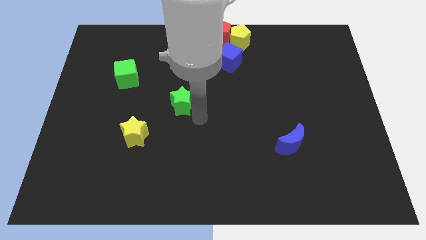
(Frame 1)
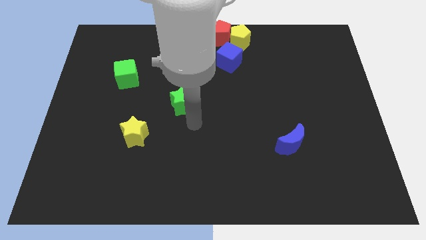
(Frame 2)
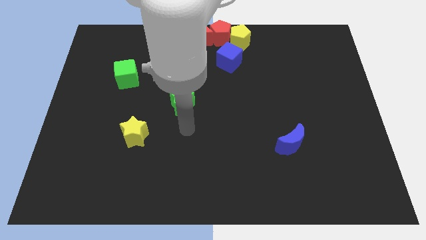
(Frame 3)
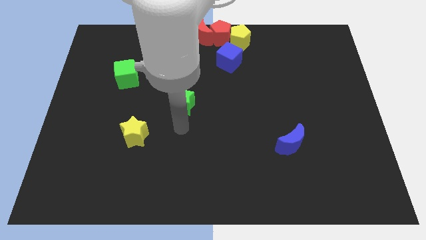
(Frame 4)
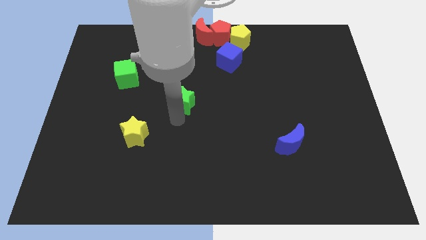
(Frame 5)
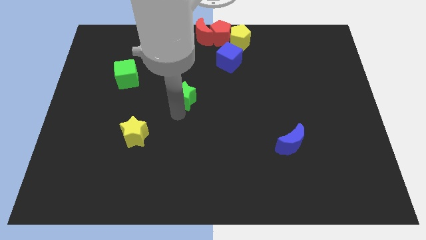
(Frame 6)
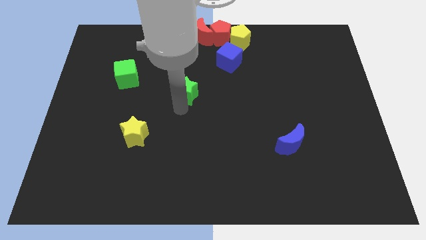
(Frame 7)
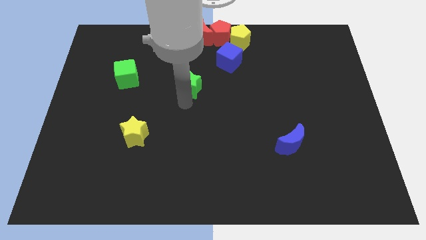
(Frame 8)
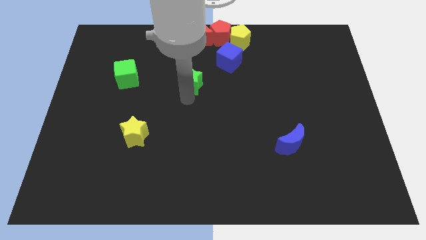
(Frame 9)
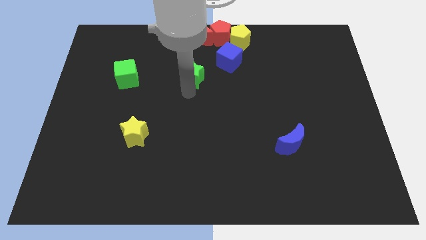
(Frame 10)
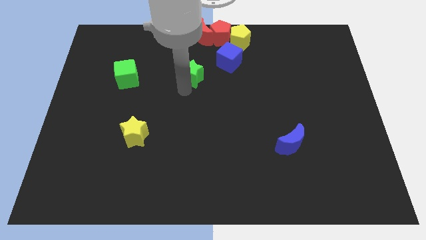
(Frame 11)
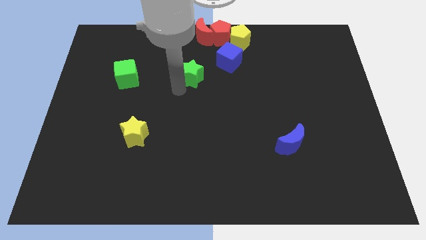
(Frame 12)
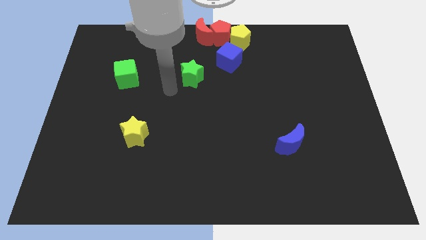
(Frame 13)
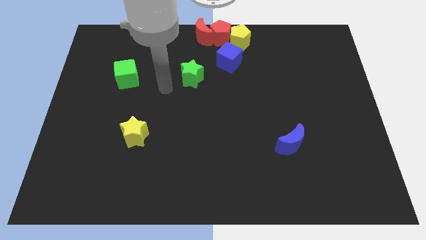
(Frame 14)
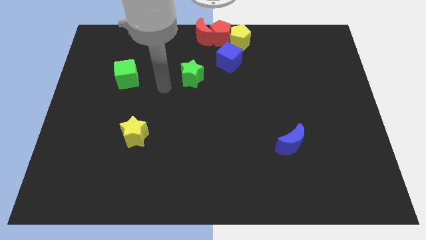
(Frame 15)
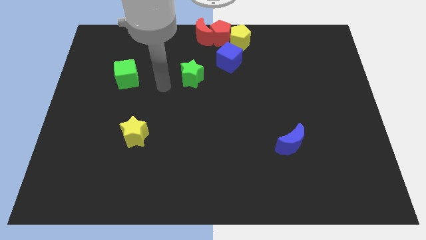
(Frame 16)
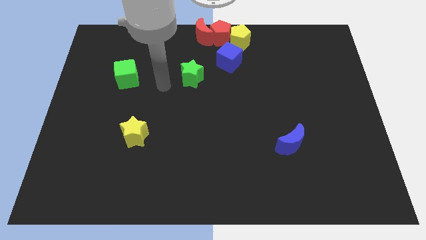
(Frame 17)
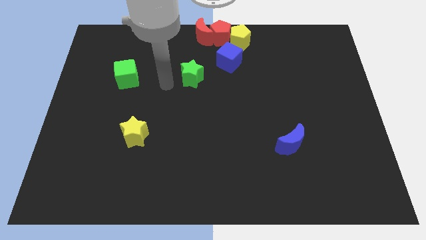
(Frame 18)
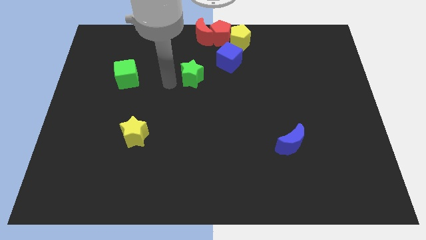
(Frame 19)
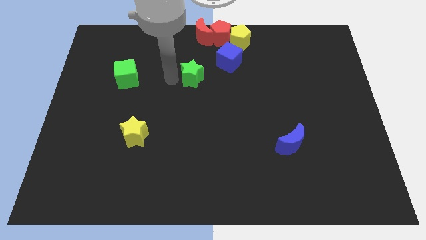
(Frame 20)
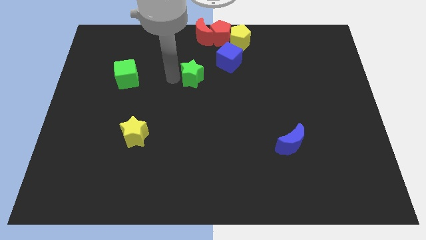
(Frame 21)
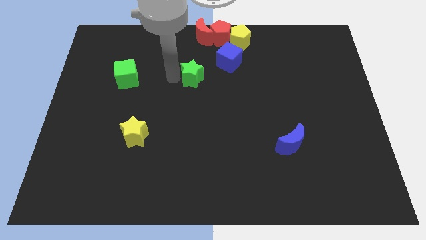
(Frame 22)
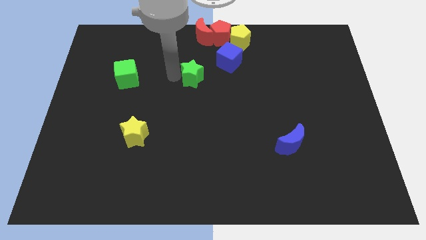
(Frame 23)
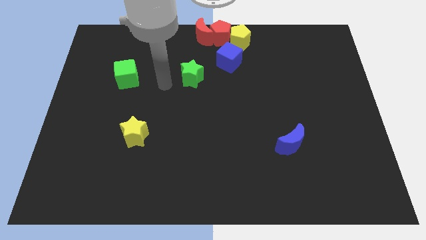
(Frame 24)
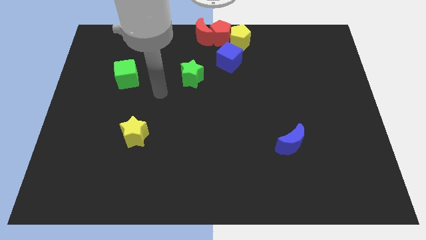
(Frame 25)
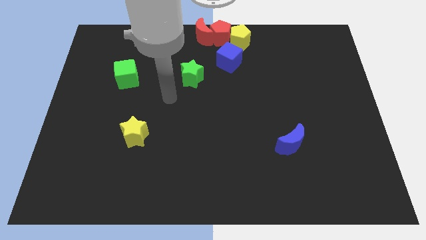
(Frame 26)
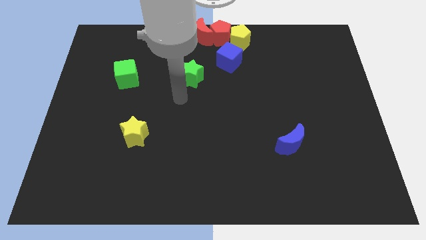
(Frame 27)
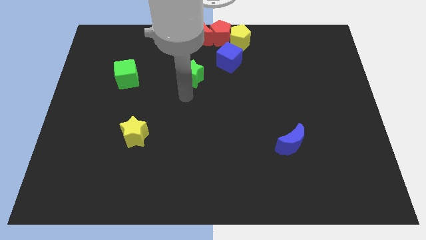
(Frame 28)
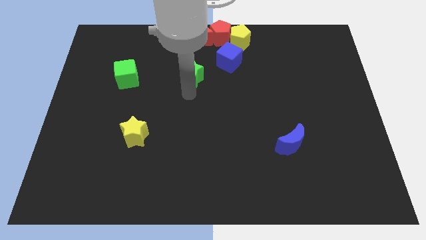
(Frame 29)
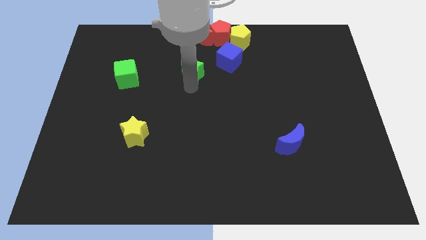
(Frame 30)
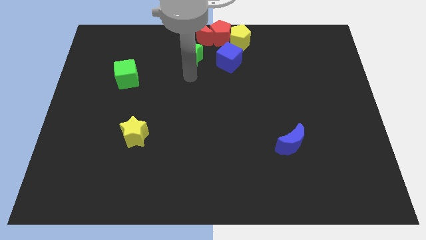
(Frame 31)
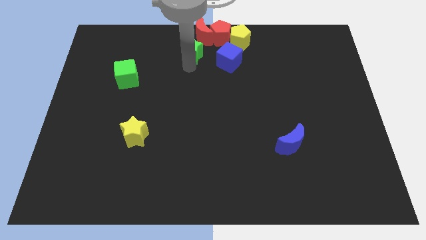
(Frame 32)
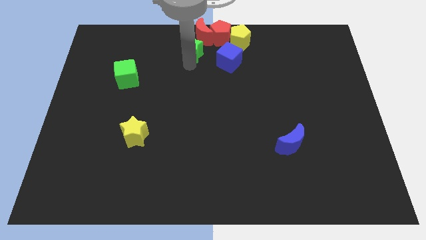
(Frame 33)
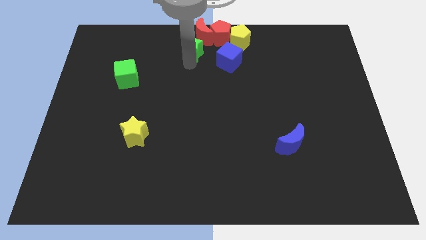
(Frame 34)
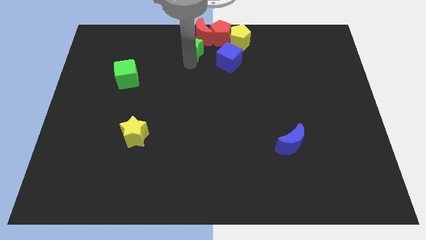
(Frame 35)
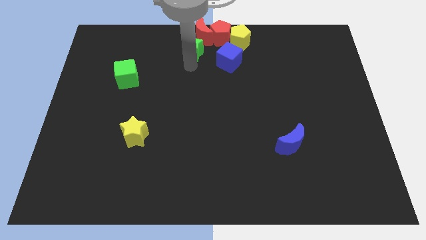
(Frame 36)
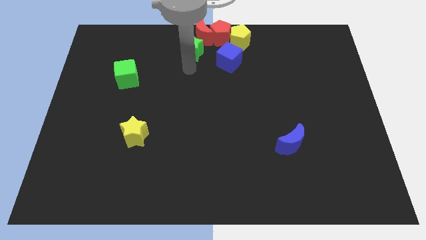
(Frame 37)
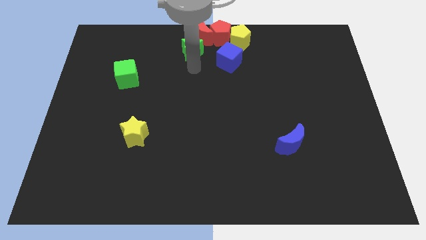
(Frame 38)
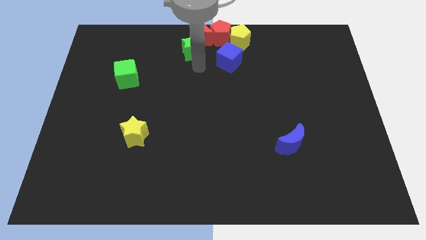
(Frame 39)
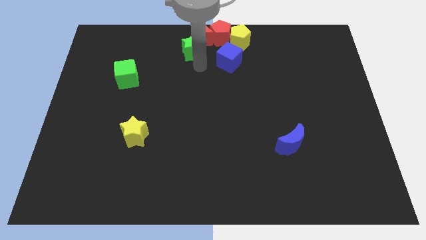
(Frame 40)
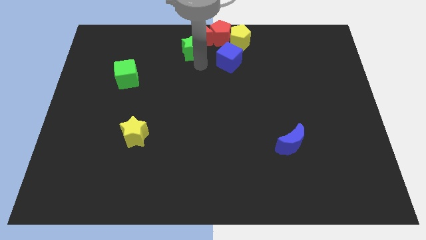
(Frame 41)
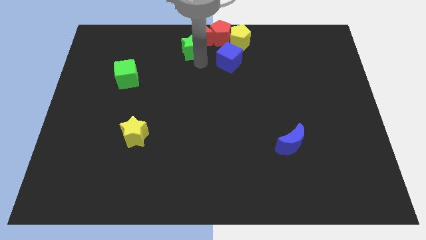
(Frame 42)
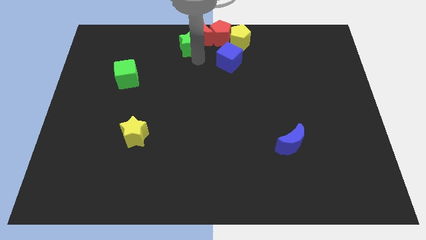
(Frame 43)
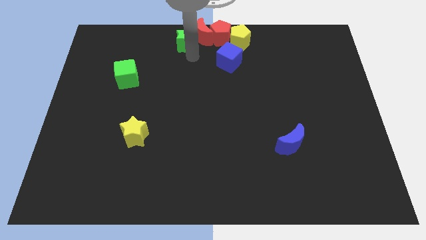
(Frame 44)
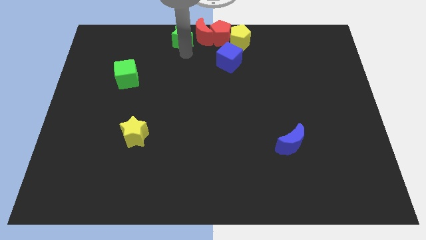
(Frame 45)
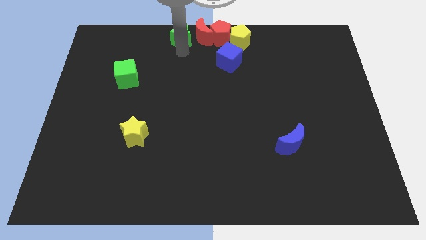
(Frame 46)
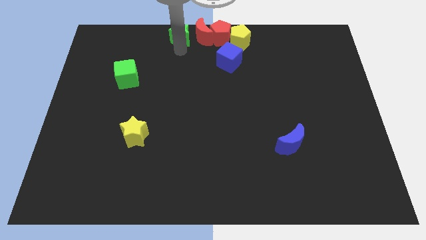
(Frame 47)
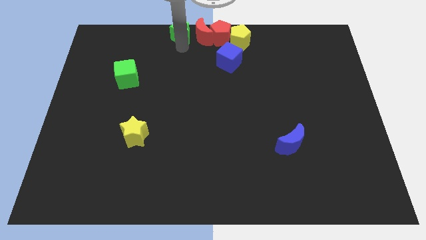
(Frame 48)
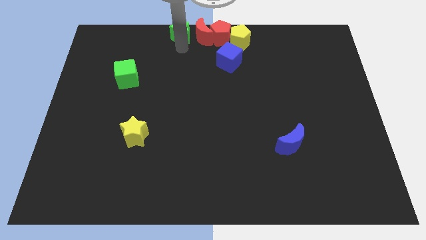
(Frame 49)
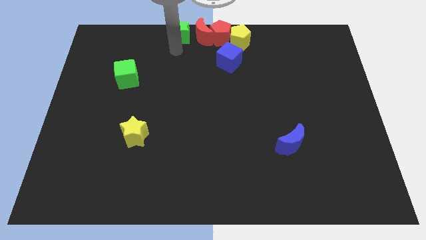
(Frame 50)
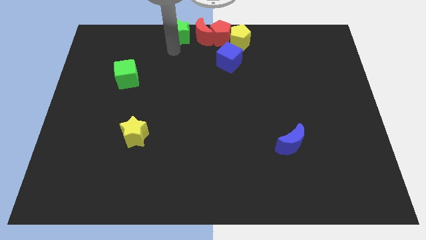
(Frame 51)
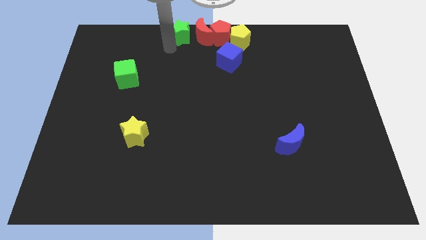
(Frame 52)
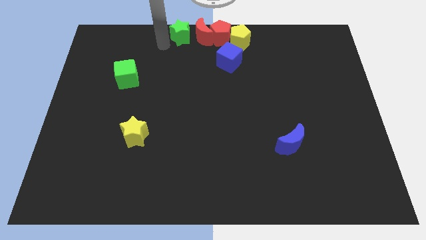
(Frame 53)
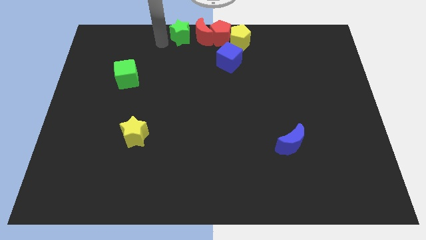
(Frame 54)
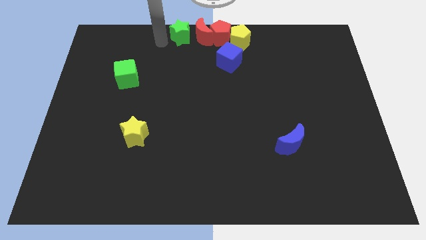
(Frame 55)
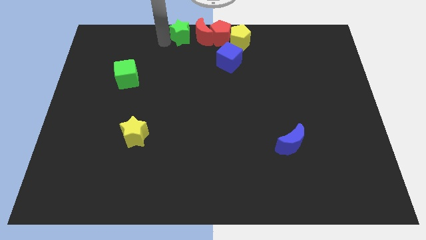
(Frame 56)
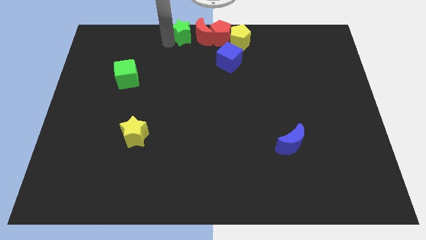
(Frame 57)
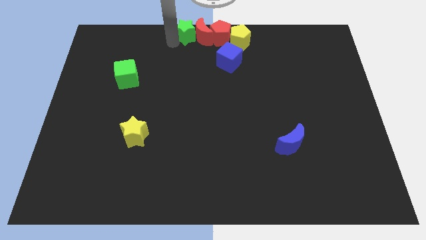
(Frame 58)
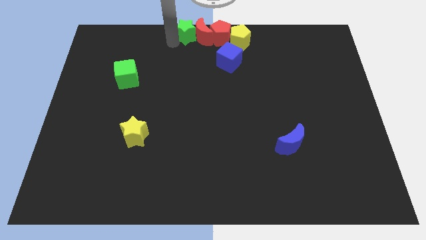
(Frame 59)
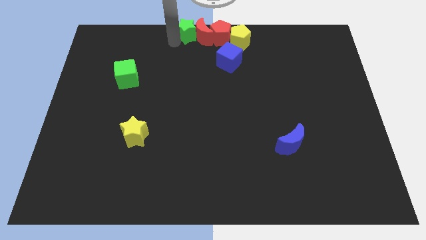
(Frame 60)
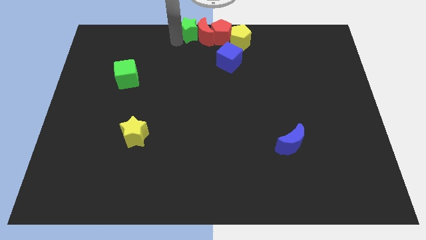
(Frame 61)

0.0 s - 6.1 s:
put the green star at the left side of the red moon

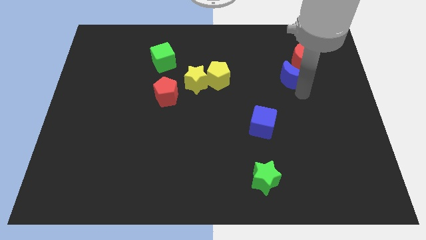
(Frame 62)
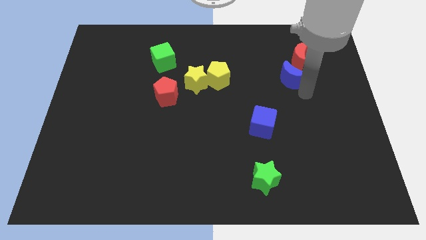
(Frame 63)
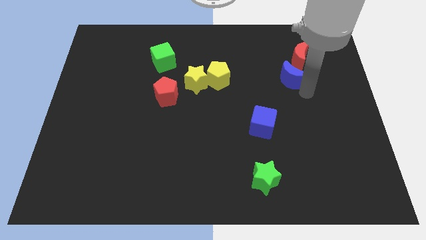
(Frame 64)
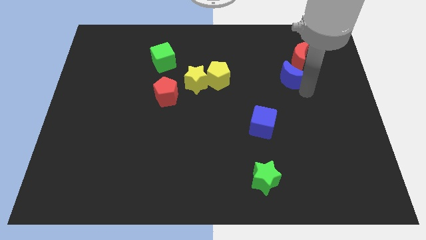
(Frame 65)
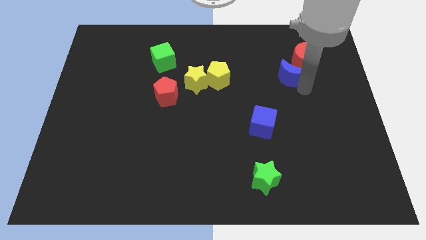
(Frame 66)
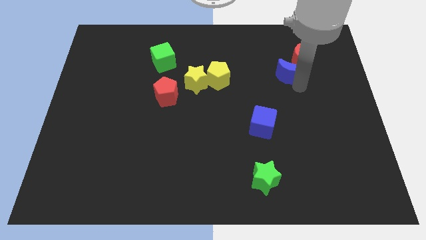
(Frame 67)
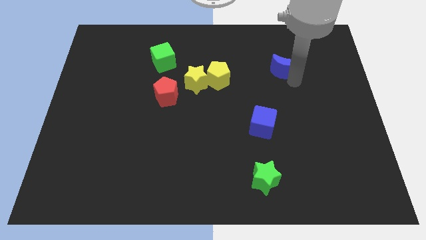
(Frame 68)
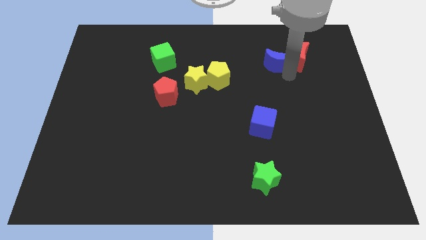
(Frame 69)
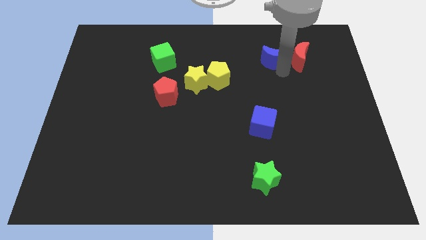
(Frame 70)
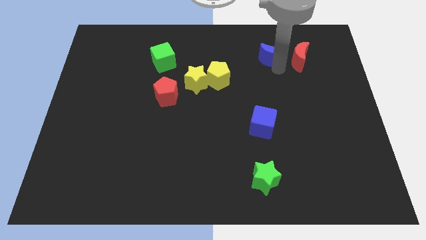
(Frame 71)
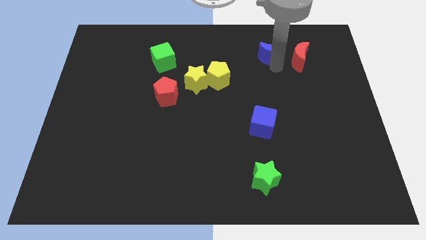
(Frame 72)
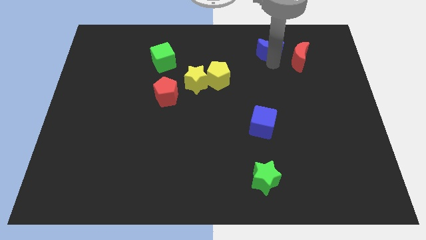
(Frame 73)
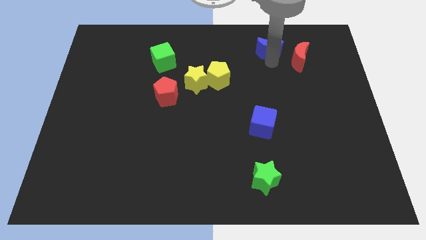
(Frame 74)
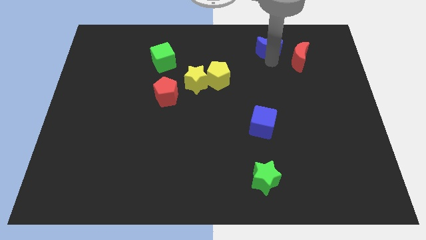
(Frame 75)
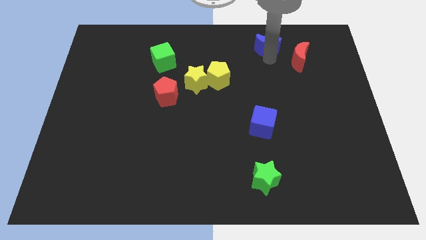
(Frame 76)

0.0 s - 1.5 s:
move blue crescent to the left of red crescent

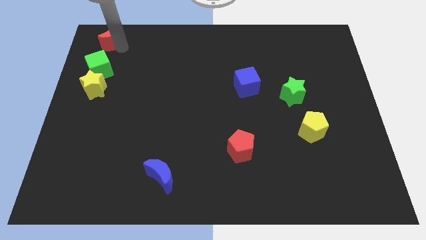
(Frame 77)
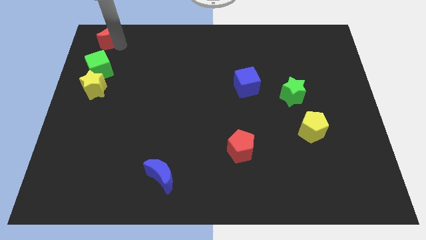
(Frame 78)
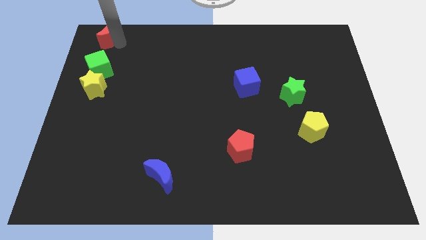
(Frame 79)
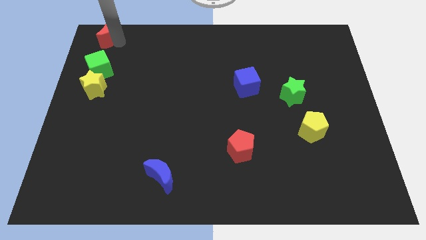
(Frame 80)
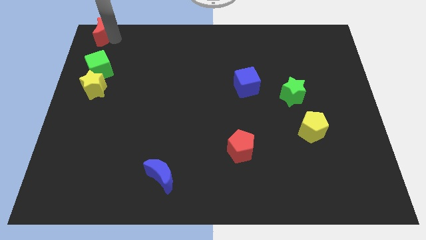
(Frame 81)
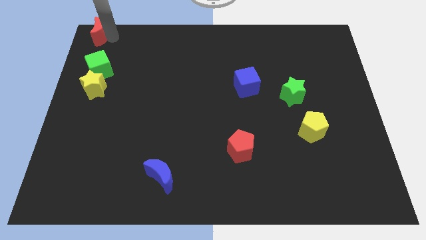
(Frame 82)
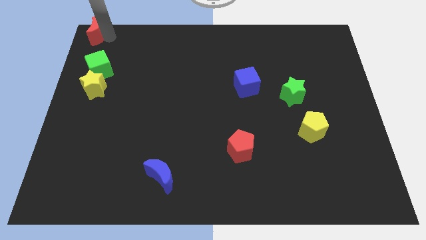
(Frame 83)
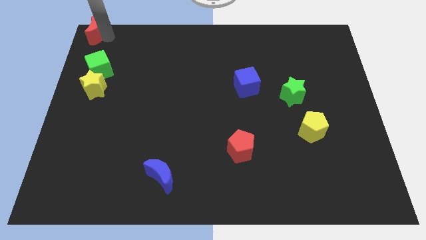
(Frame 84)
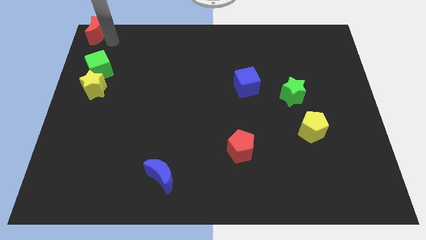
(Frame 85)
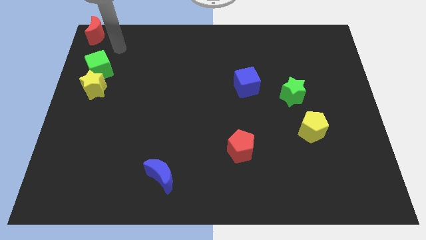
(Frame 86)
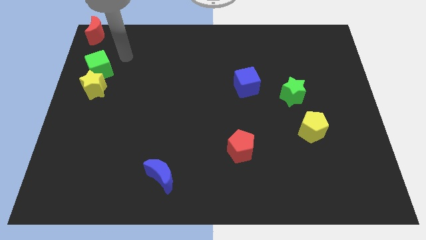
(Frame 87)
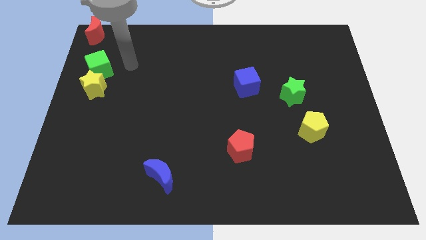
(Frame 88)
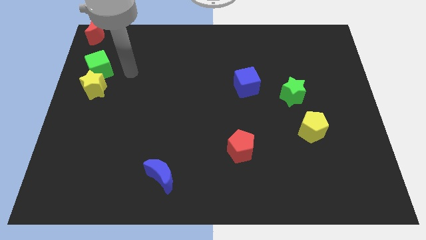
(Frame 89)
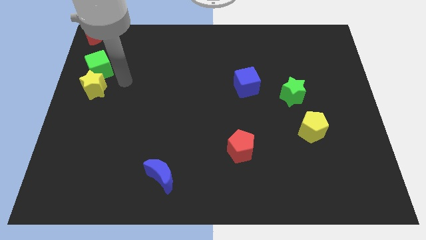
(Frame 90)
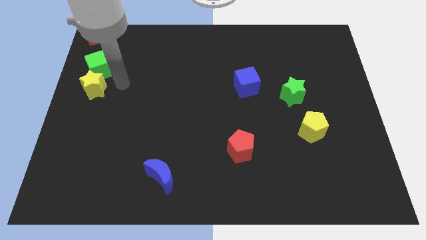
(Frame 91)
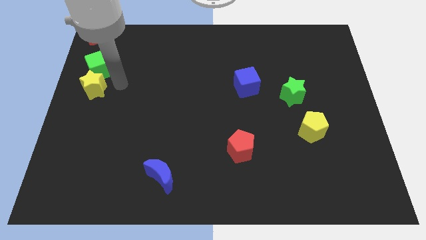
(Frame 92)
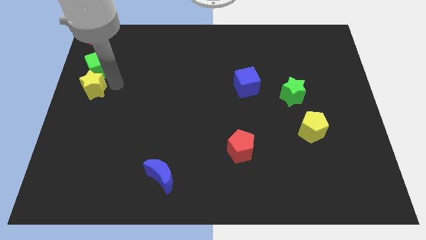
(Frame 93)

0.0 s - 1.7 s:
place the red moon to the top left
